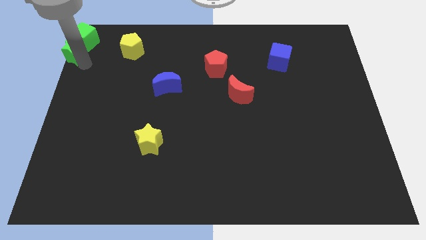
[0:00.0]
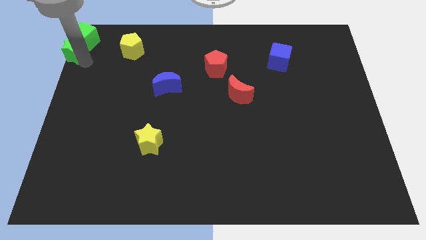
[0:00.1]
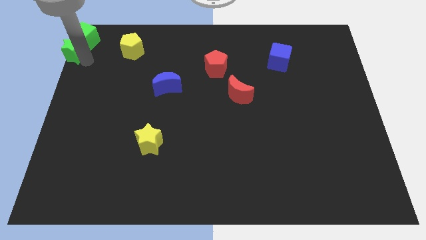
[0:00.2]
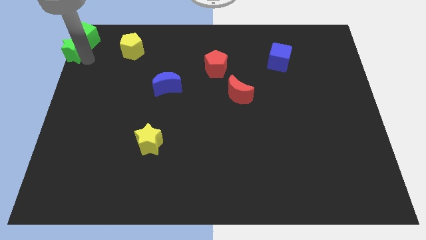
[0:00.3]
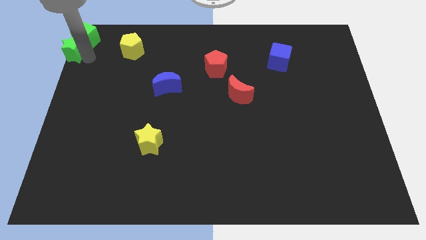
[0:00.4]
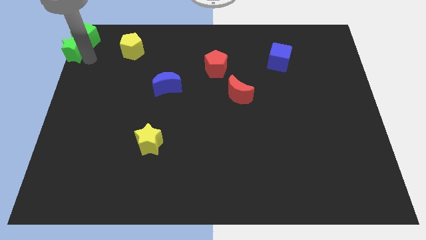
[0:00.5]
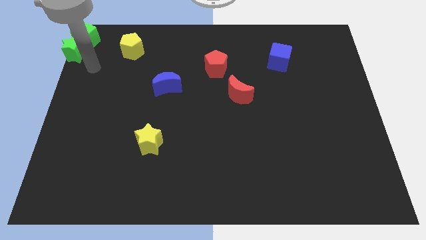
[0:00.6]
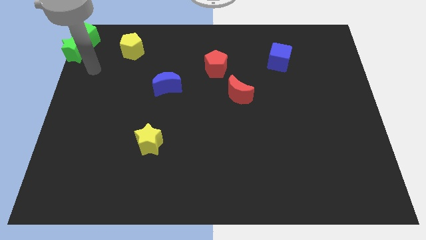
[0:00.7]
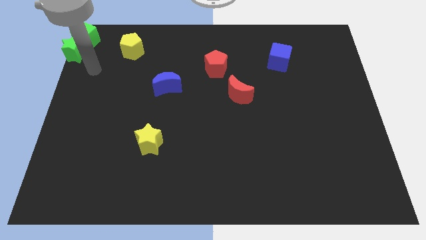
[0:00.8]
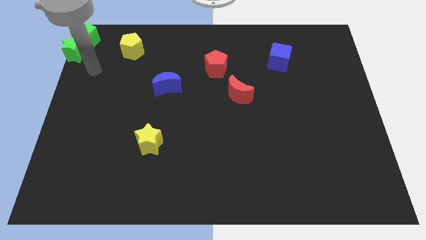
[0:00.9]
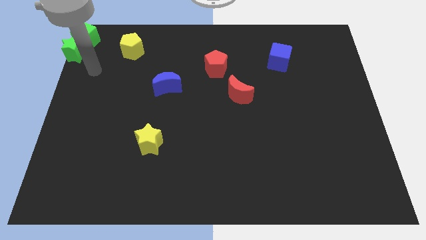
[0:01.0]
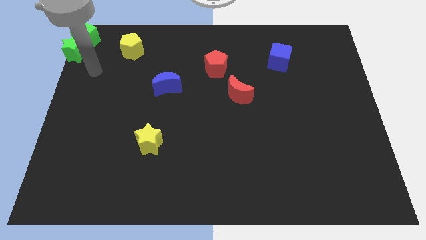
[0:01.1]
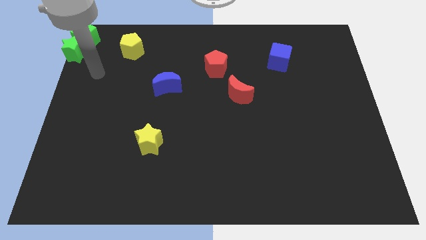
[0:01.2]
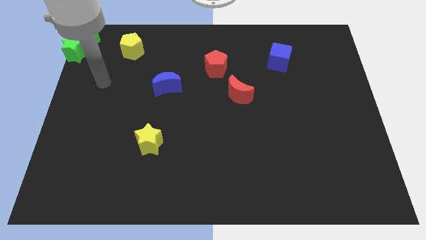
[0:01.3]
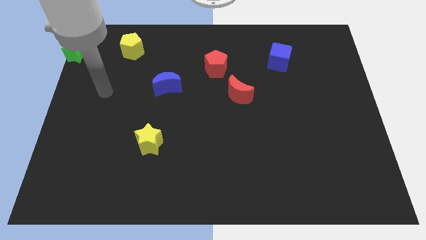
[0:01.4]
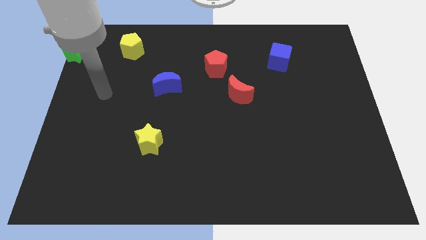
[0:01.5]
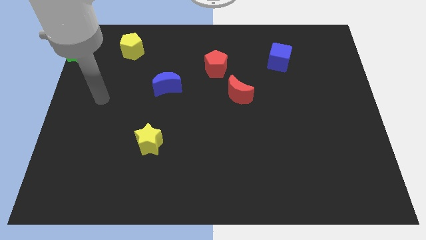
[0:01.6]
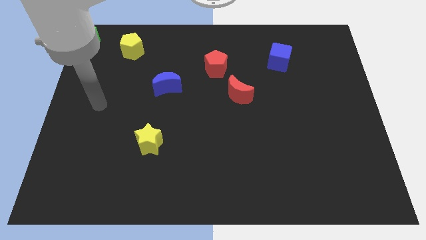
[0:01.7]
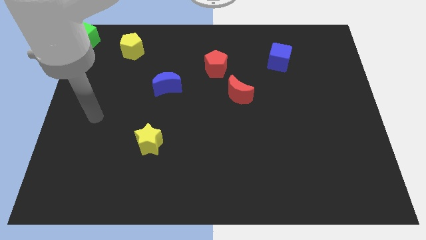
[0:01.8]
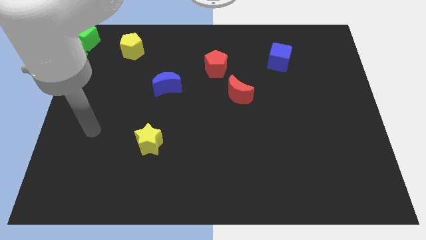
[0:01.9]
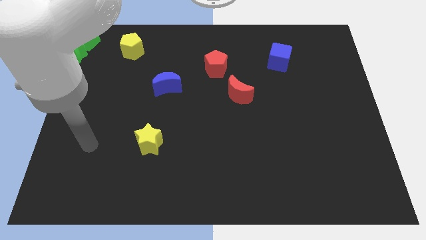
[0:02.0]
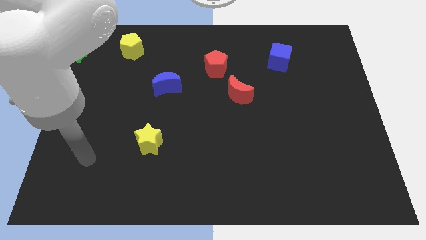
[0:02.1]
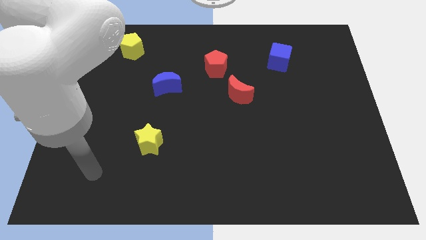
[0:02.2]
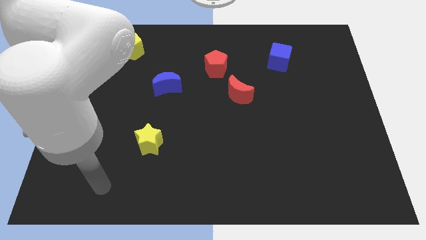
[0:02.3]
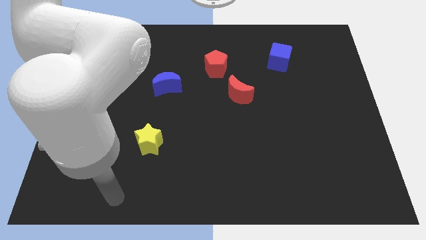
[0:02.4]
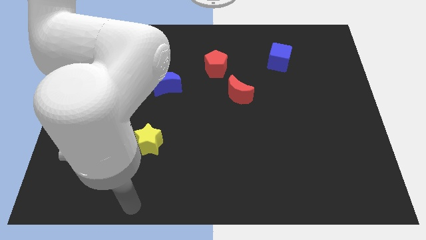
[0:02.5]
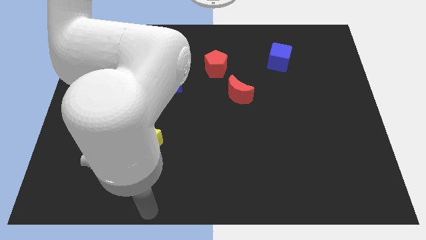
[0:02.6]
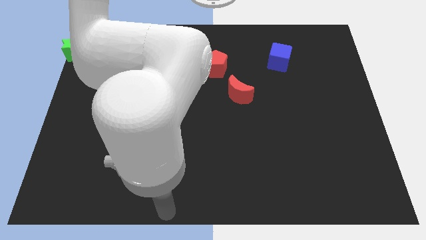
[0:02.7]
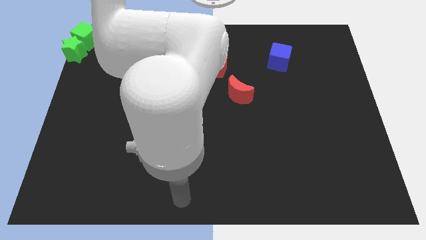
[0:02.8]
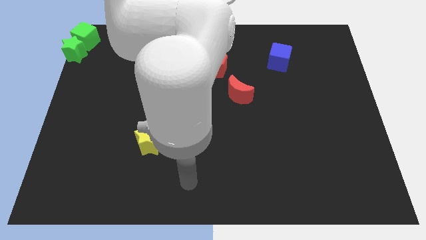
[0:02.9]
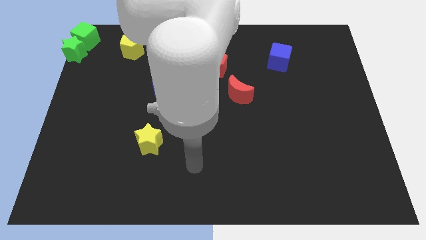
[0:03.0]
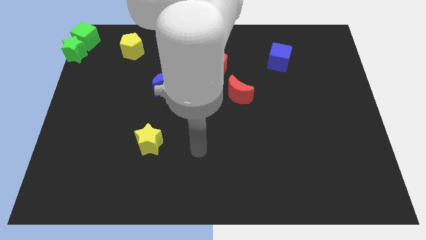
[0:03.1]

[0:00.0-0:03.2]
move your arm towards the centre of the board

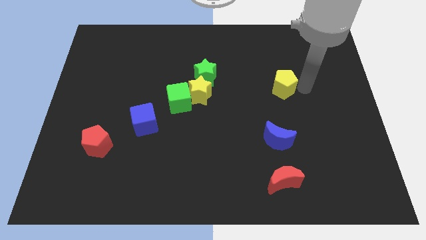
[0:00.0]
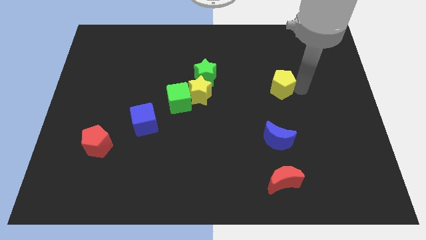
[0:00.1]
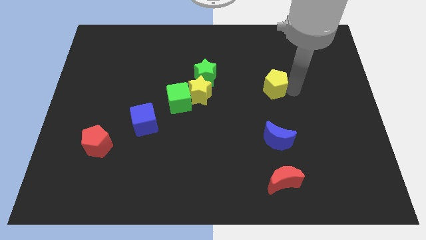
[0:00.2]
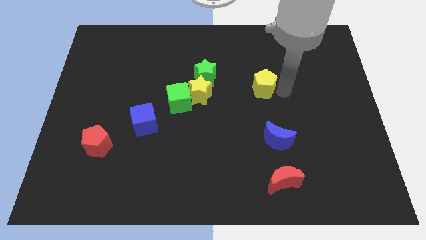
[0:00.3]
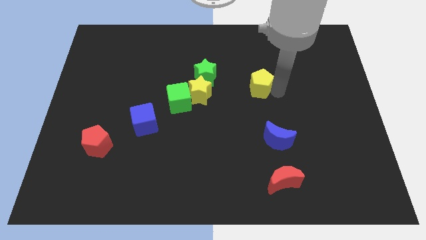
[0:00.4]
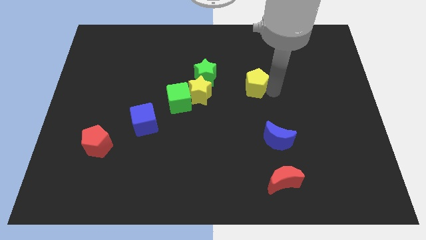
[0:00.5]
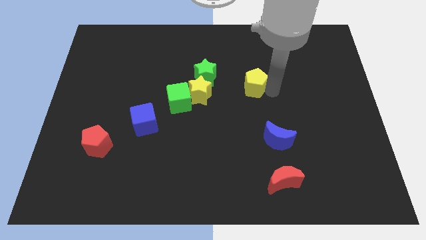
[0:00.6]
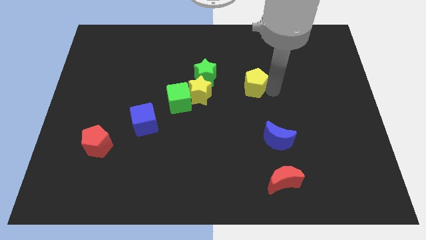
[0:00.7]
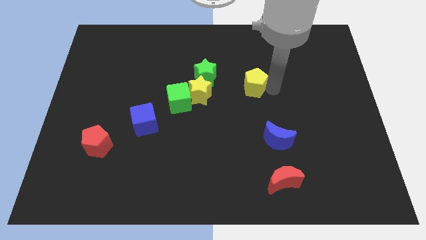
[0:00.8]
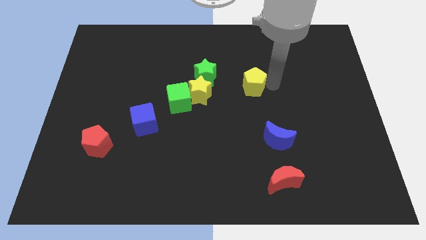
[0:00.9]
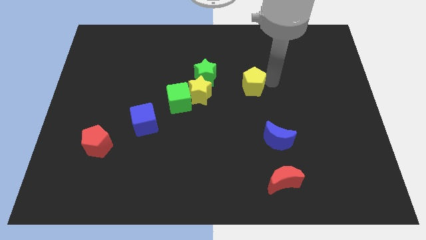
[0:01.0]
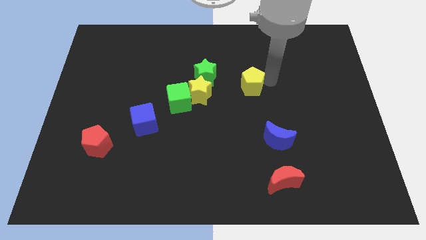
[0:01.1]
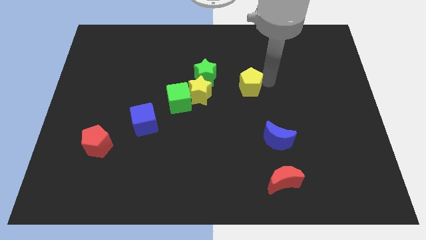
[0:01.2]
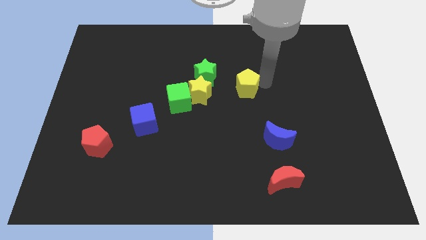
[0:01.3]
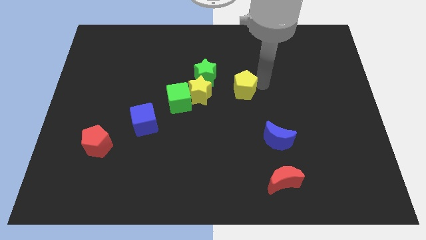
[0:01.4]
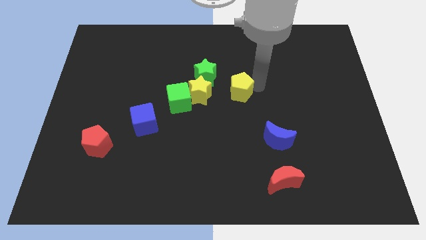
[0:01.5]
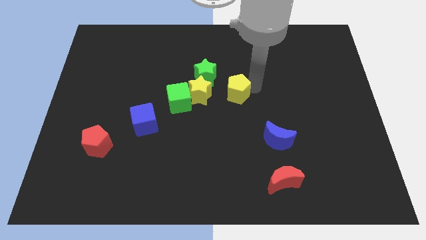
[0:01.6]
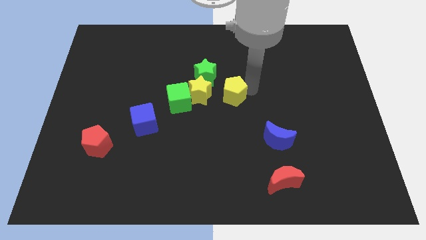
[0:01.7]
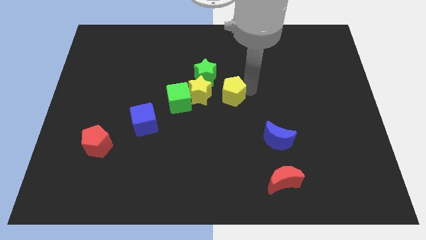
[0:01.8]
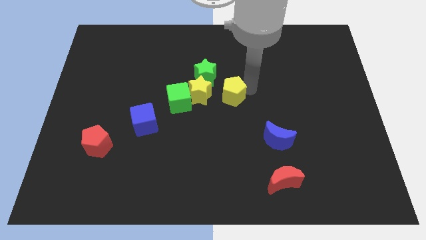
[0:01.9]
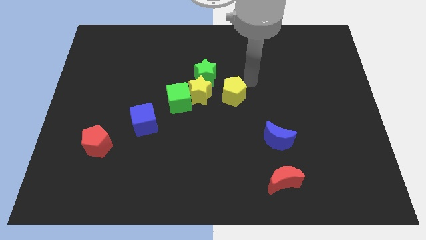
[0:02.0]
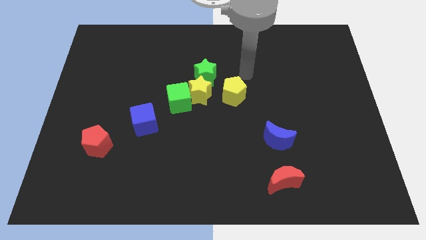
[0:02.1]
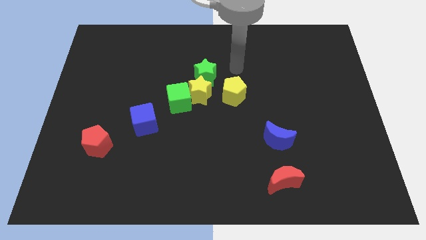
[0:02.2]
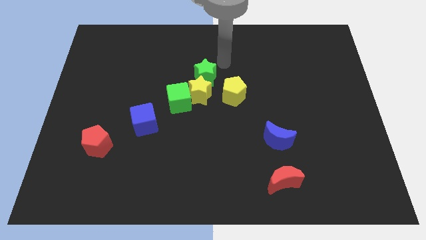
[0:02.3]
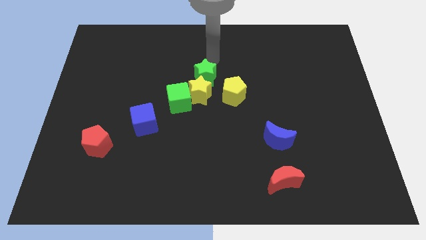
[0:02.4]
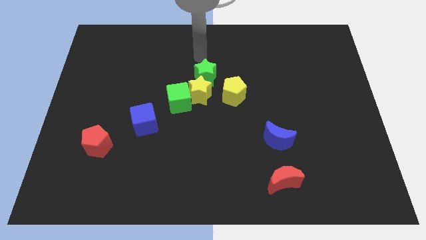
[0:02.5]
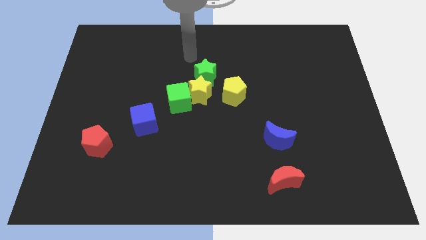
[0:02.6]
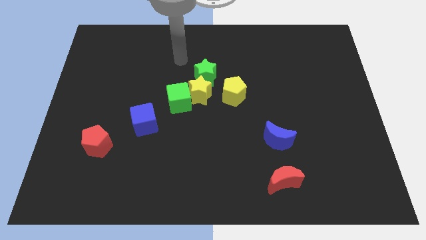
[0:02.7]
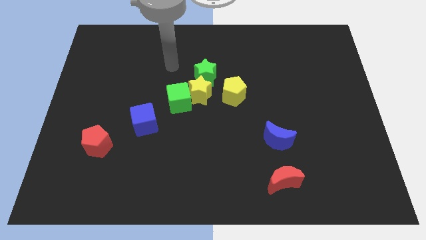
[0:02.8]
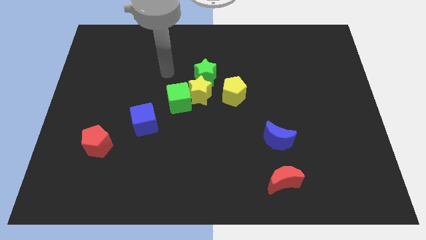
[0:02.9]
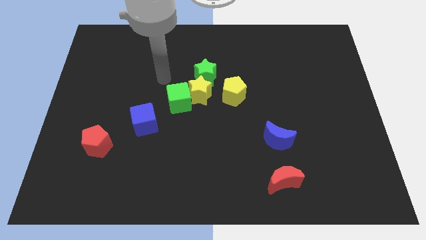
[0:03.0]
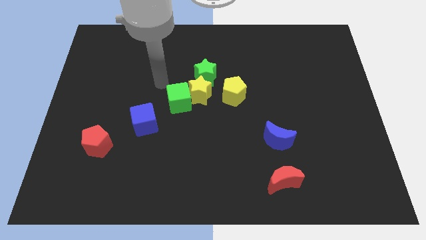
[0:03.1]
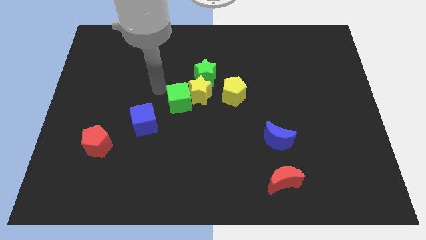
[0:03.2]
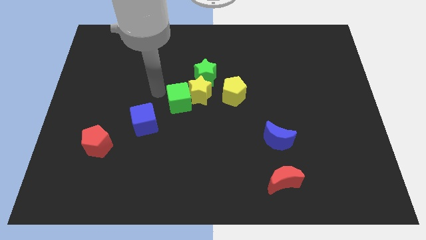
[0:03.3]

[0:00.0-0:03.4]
move the yellow pentagon to the right of the yellow star

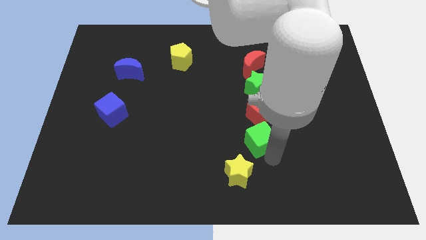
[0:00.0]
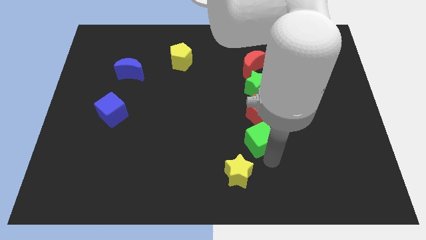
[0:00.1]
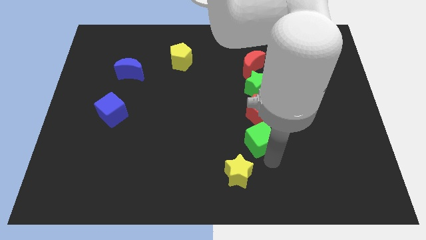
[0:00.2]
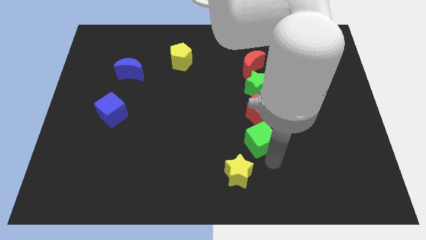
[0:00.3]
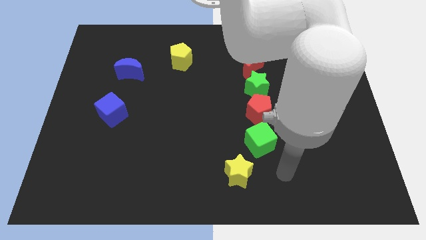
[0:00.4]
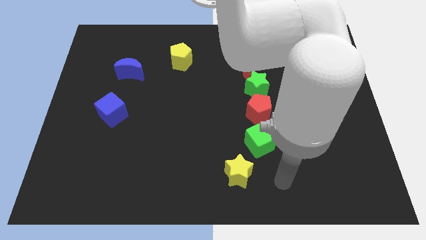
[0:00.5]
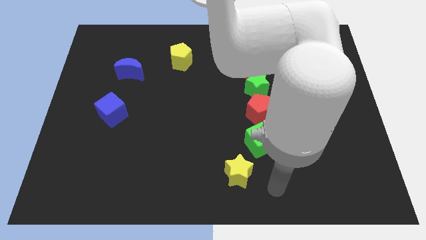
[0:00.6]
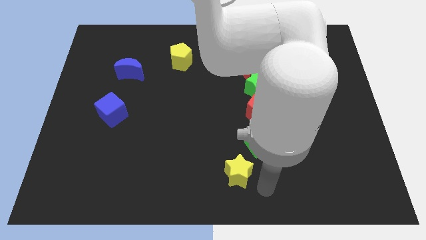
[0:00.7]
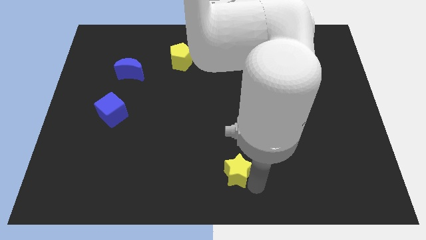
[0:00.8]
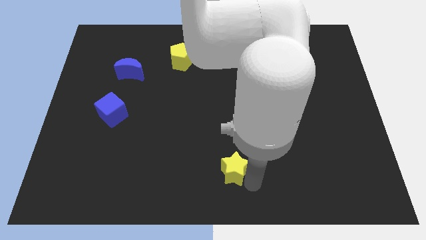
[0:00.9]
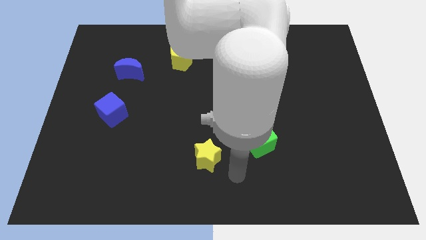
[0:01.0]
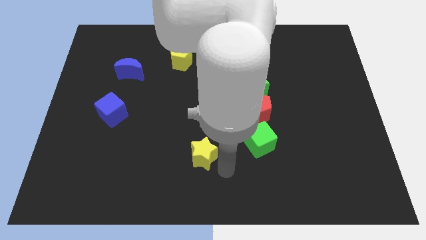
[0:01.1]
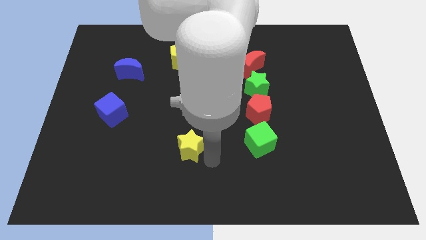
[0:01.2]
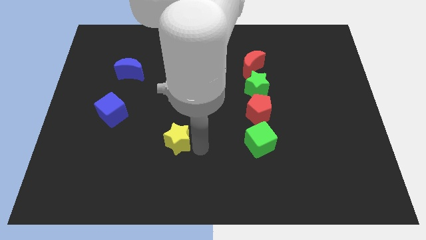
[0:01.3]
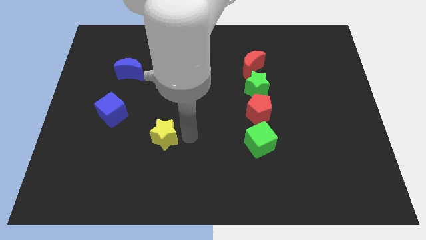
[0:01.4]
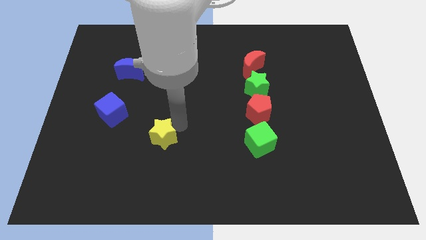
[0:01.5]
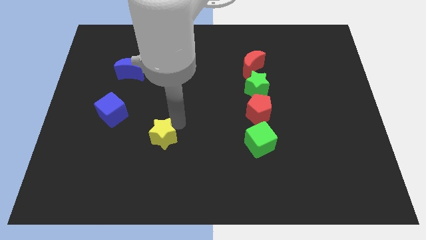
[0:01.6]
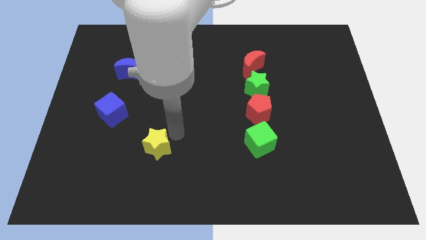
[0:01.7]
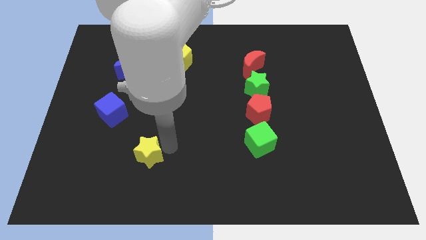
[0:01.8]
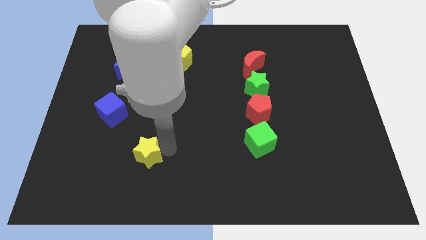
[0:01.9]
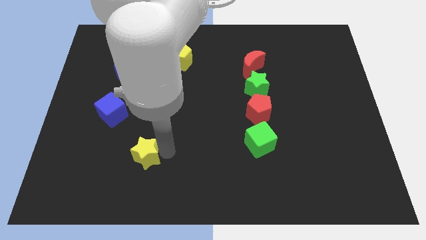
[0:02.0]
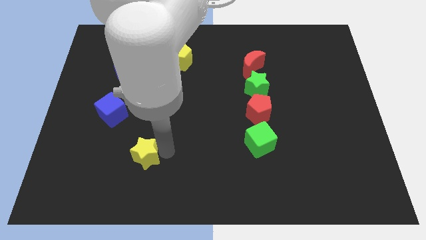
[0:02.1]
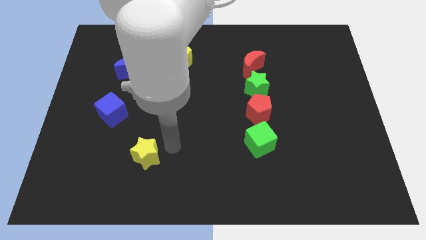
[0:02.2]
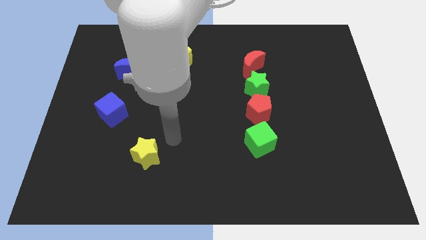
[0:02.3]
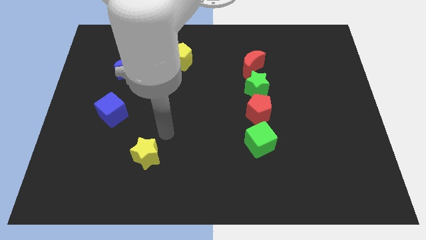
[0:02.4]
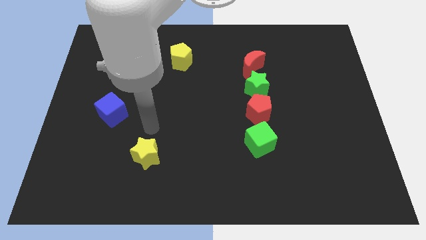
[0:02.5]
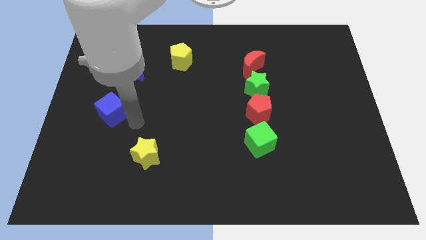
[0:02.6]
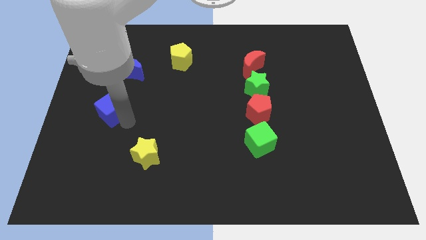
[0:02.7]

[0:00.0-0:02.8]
separate yellow star from the green cube
